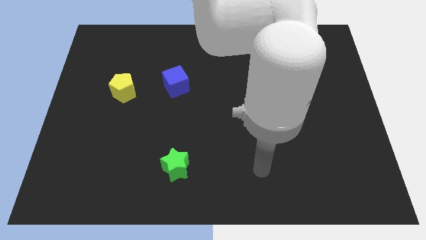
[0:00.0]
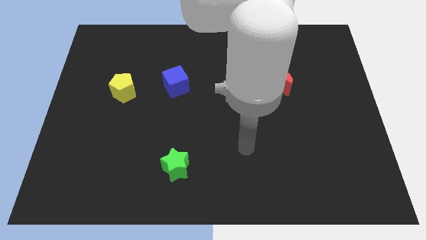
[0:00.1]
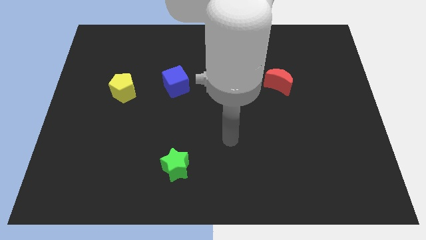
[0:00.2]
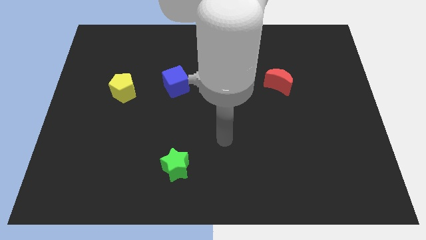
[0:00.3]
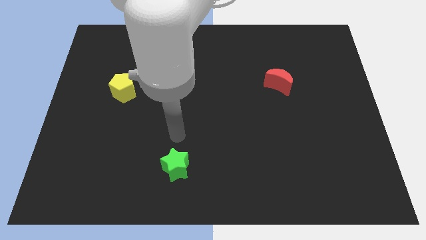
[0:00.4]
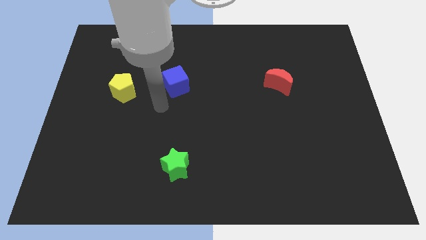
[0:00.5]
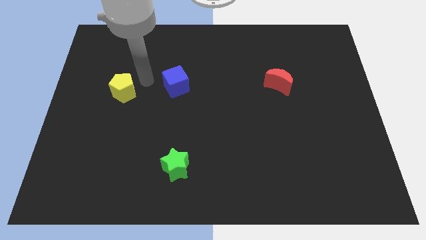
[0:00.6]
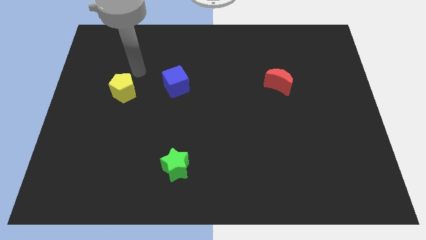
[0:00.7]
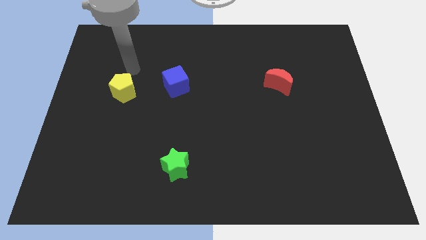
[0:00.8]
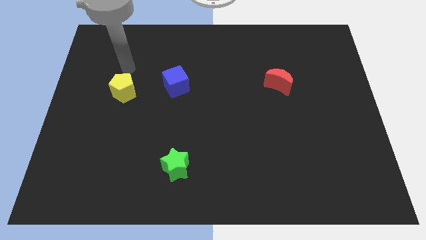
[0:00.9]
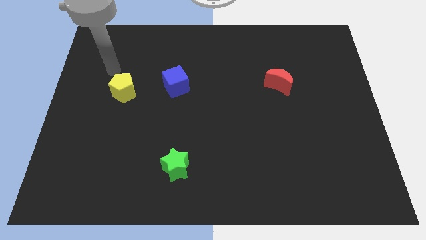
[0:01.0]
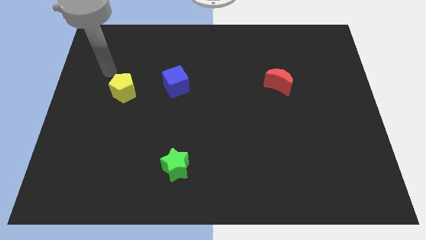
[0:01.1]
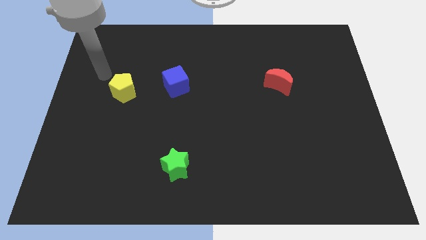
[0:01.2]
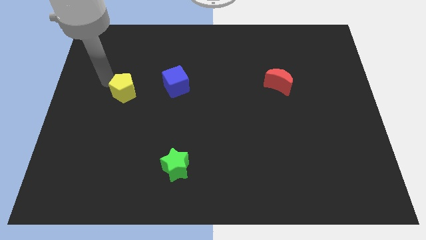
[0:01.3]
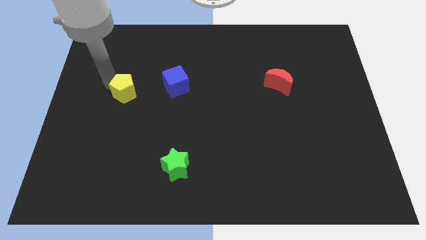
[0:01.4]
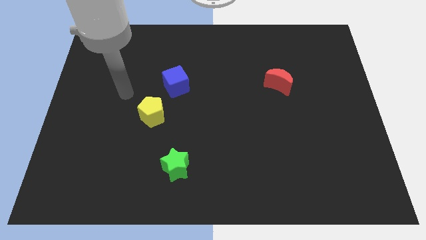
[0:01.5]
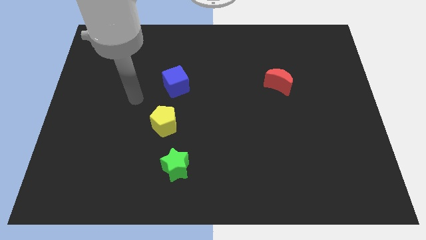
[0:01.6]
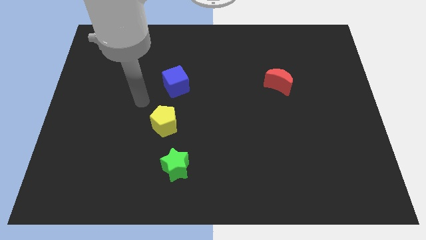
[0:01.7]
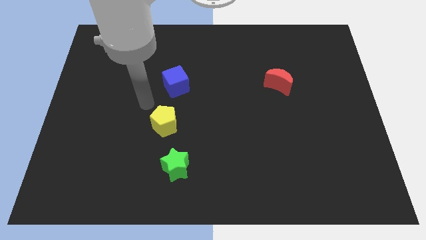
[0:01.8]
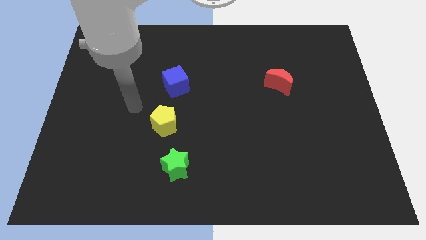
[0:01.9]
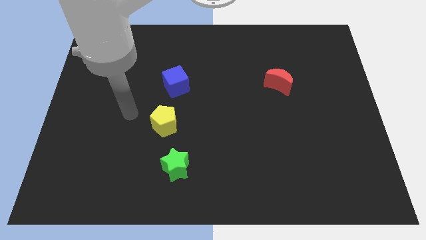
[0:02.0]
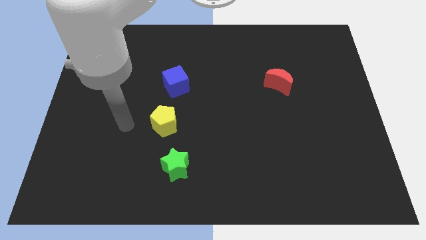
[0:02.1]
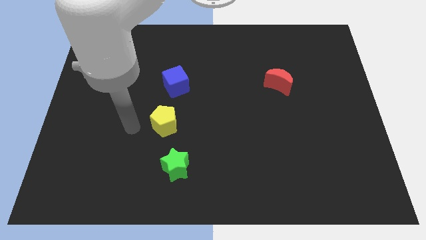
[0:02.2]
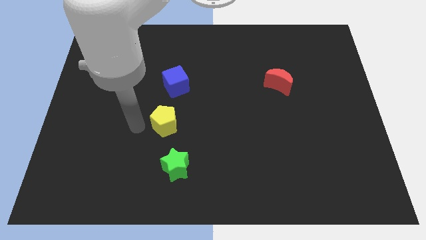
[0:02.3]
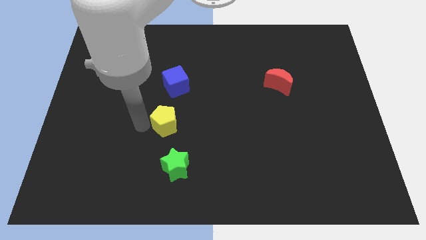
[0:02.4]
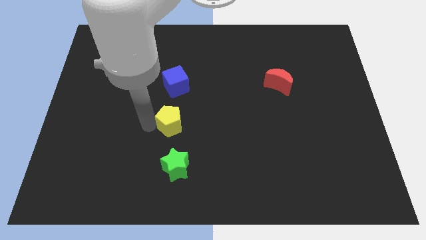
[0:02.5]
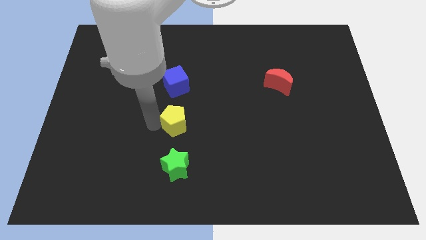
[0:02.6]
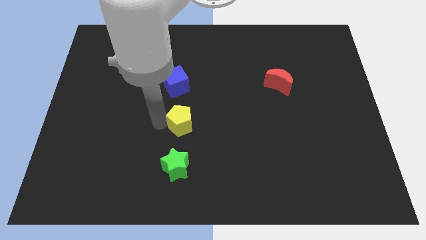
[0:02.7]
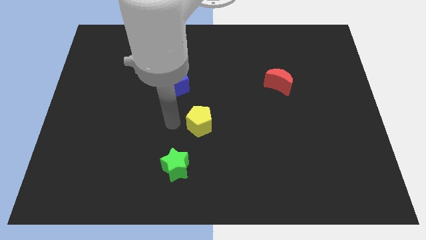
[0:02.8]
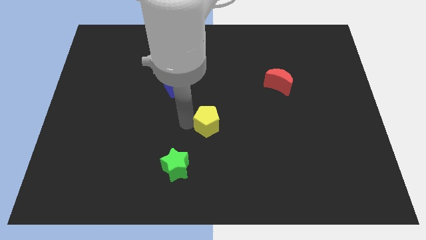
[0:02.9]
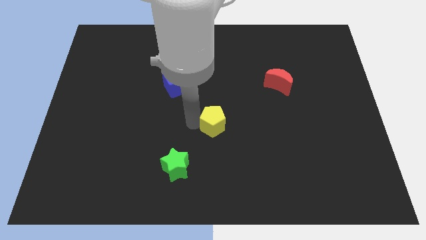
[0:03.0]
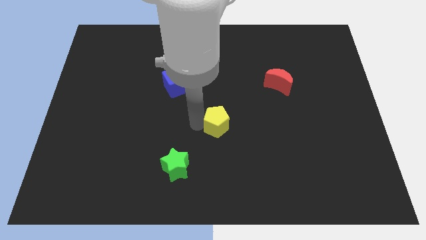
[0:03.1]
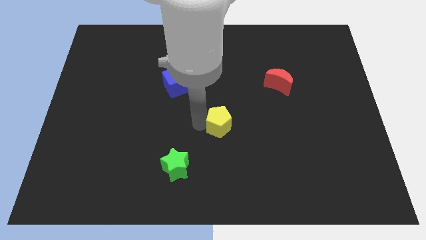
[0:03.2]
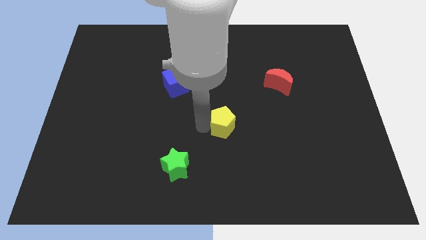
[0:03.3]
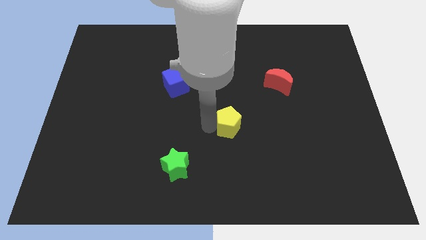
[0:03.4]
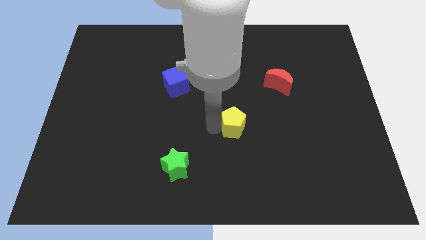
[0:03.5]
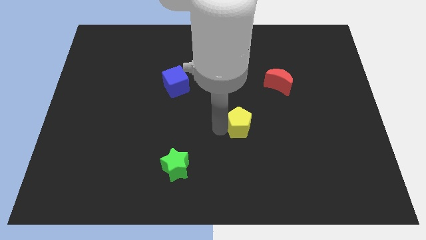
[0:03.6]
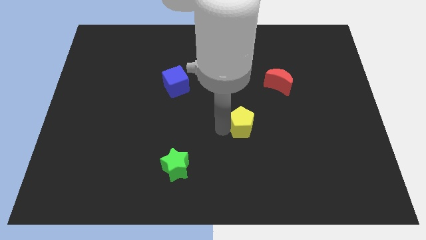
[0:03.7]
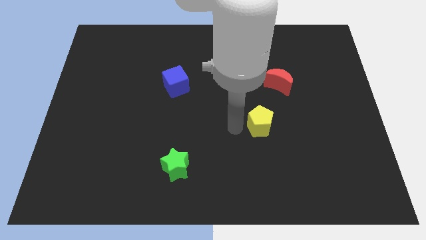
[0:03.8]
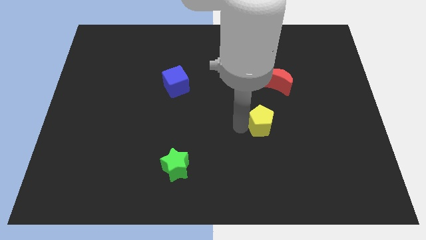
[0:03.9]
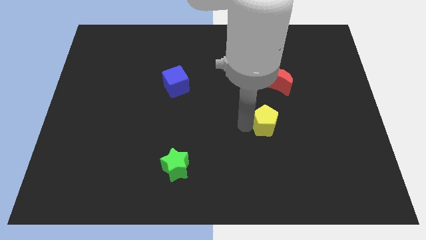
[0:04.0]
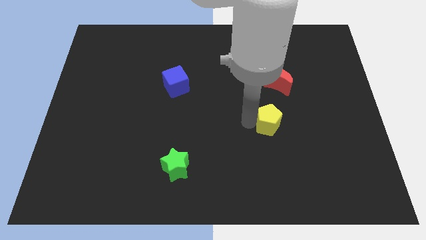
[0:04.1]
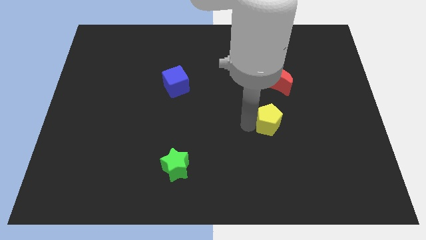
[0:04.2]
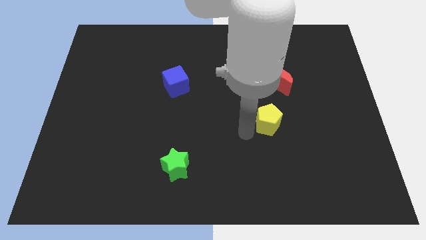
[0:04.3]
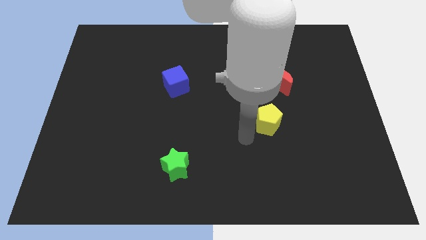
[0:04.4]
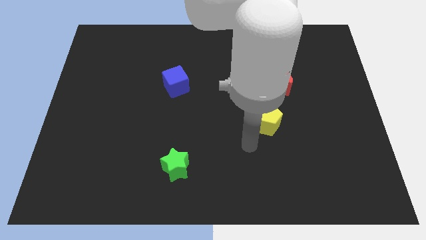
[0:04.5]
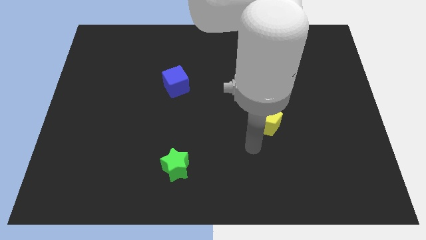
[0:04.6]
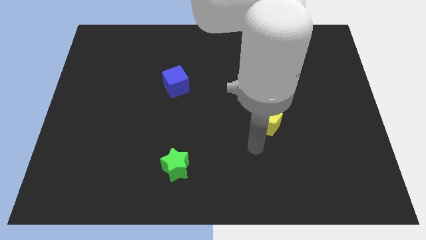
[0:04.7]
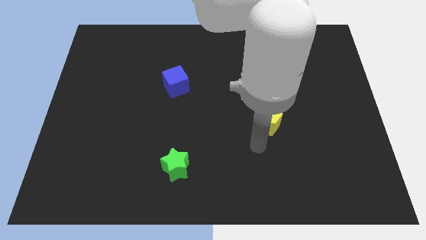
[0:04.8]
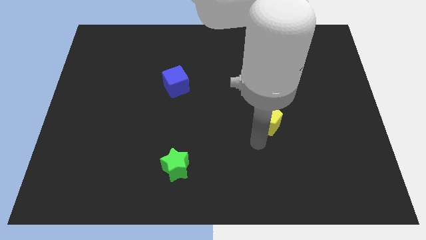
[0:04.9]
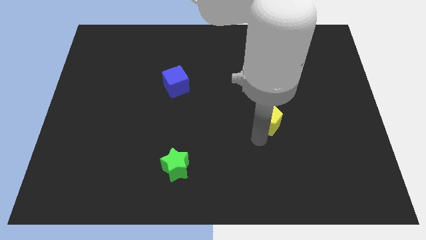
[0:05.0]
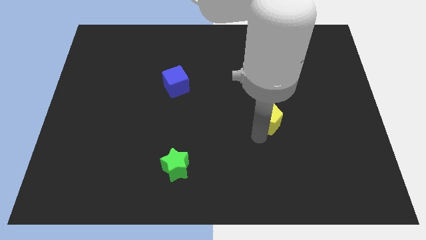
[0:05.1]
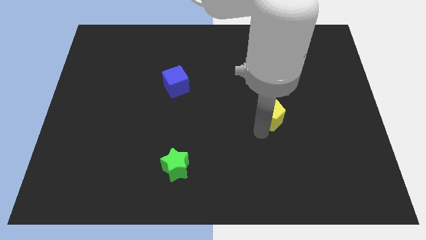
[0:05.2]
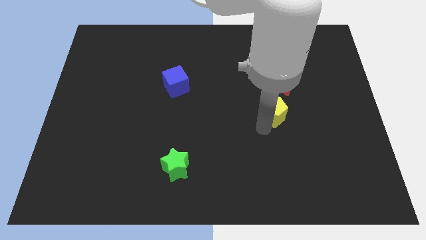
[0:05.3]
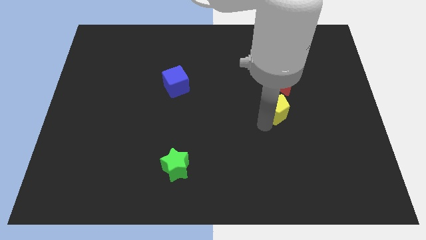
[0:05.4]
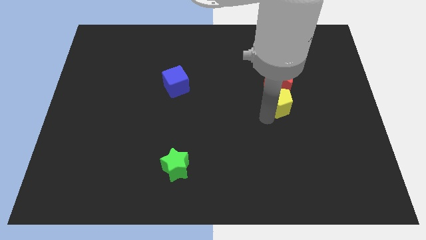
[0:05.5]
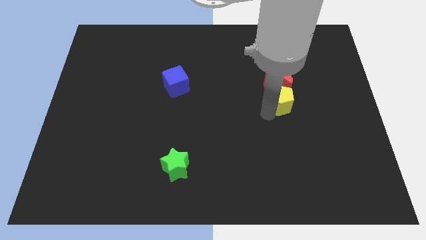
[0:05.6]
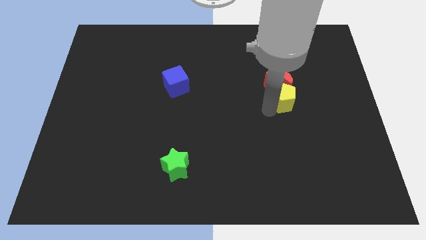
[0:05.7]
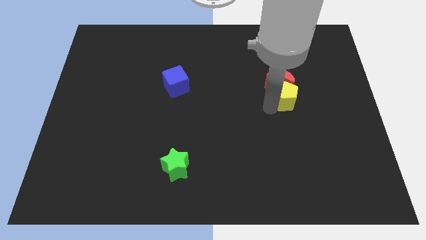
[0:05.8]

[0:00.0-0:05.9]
slide the yellow pentagon towards the moon

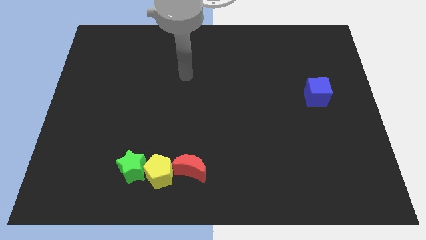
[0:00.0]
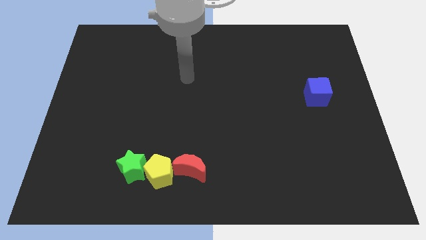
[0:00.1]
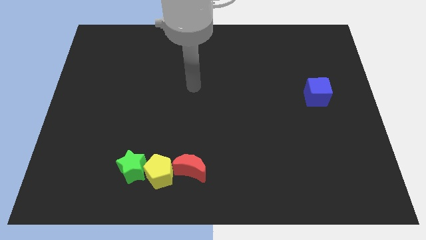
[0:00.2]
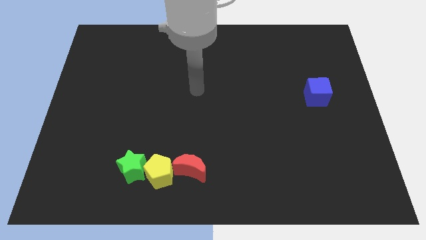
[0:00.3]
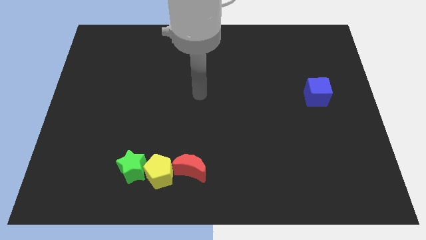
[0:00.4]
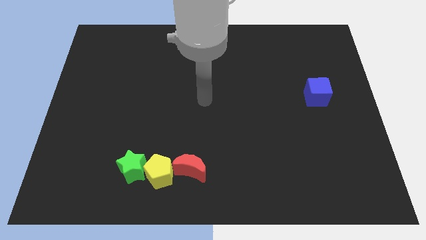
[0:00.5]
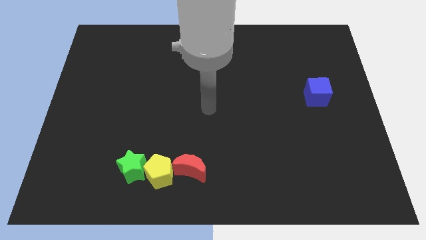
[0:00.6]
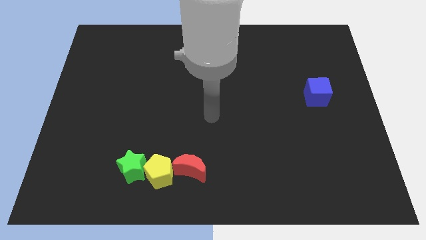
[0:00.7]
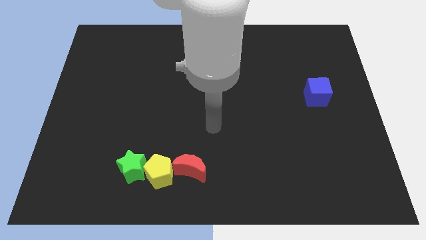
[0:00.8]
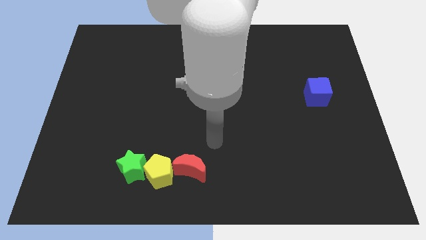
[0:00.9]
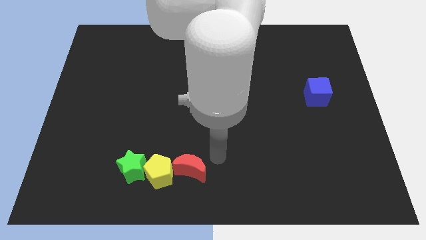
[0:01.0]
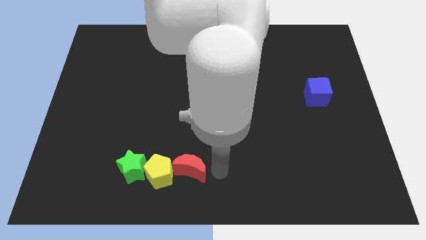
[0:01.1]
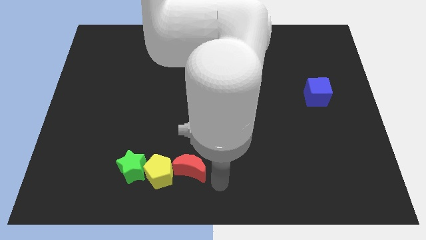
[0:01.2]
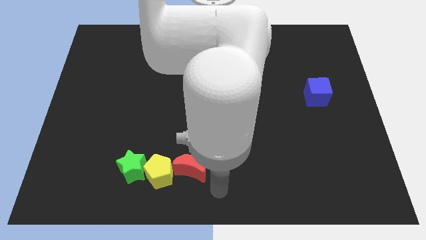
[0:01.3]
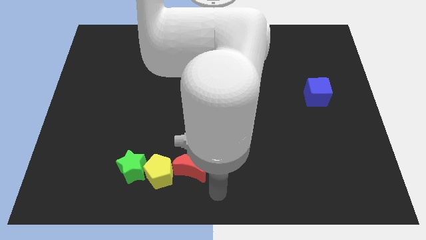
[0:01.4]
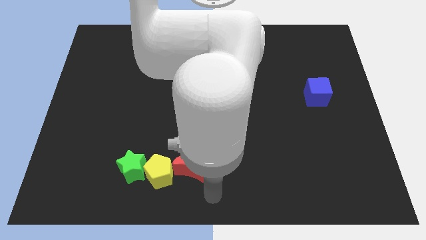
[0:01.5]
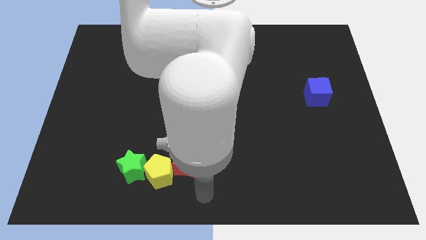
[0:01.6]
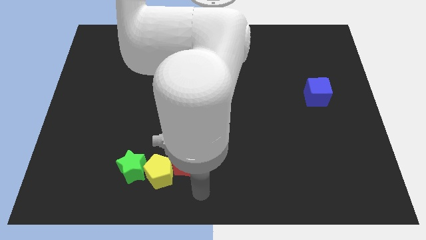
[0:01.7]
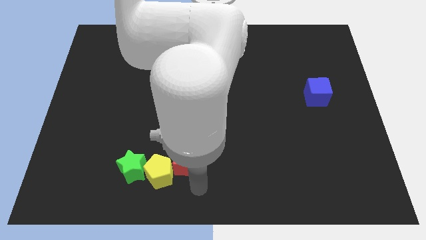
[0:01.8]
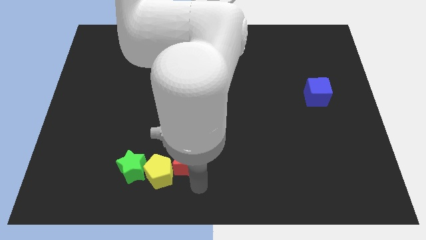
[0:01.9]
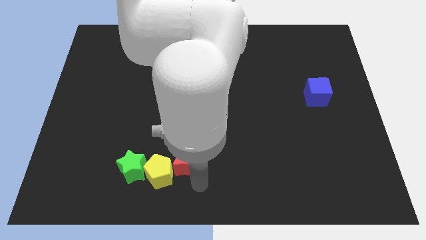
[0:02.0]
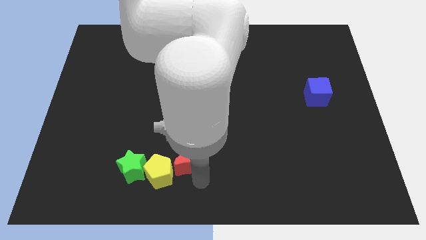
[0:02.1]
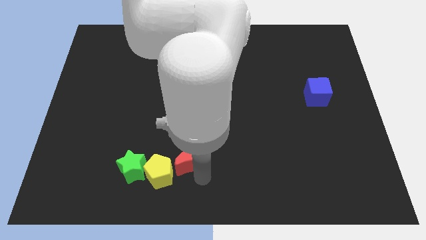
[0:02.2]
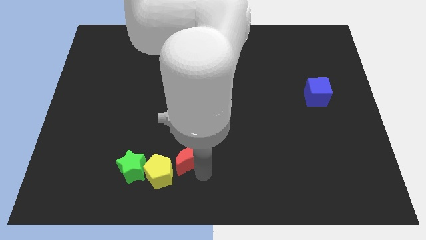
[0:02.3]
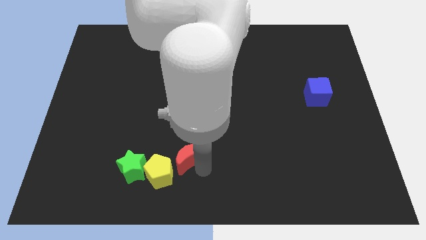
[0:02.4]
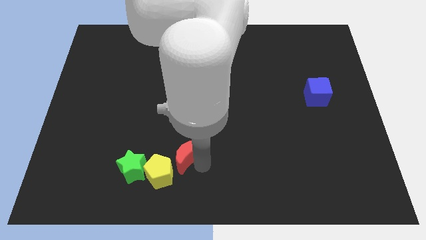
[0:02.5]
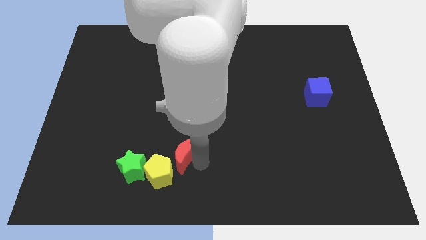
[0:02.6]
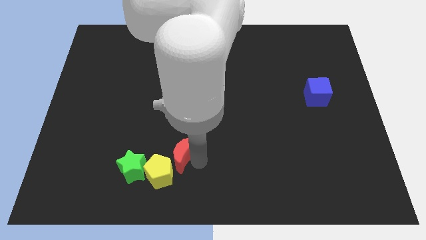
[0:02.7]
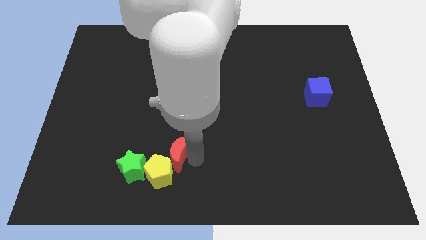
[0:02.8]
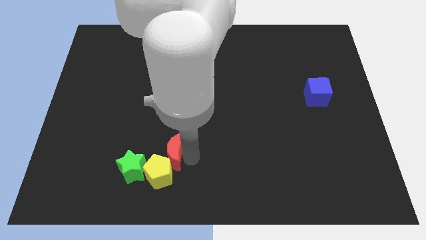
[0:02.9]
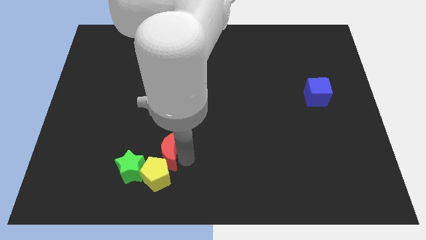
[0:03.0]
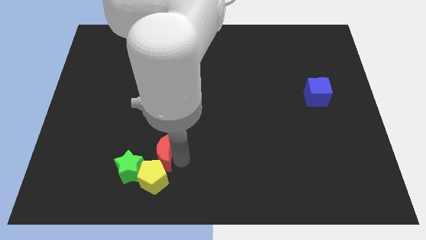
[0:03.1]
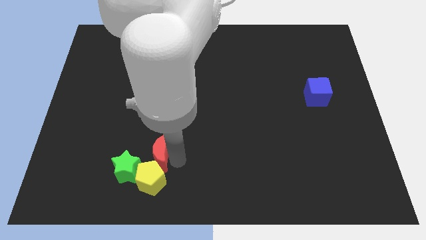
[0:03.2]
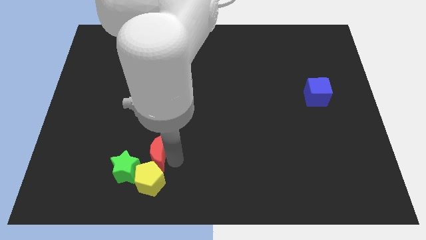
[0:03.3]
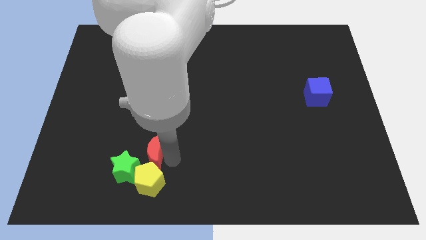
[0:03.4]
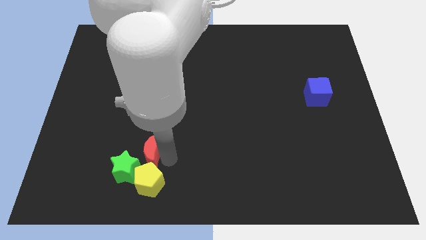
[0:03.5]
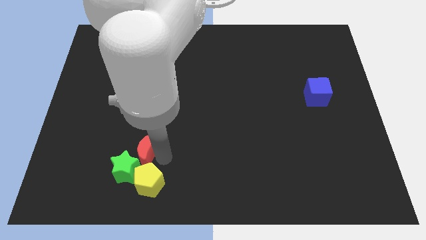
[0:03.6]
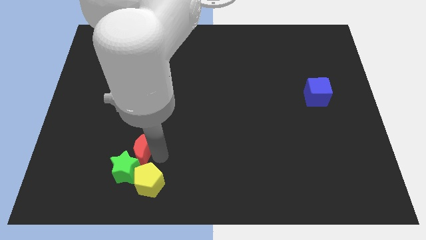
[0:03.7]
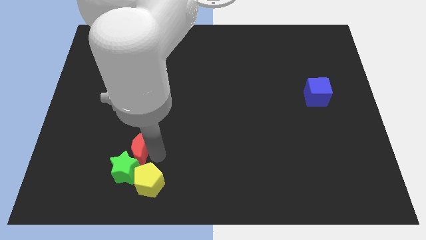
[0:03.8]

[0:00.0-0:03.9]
slide the red moon next to the star
